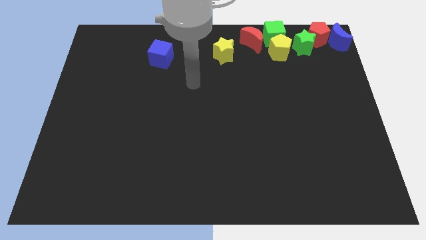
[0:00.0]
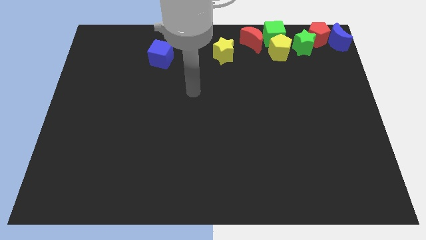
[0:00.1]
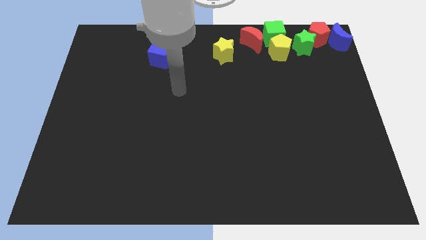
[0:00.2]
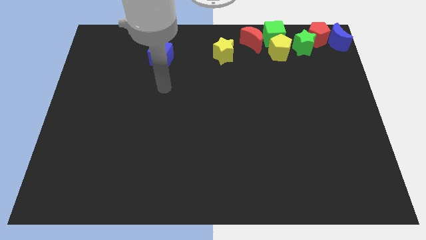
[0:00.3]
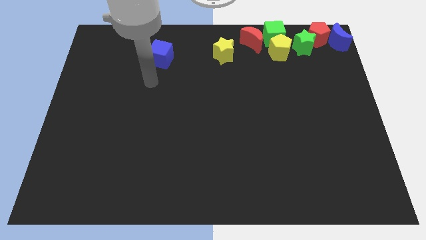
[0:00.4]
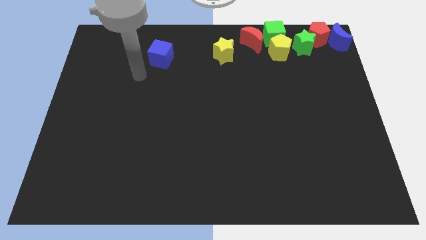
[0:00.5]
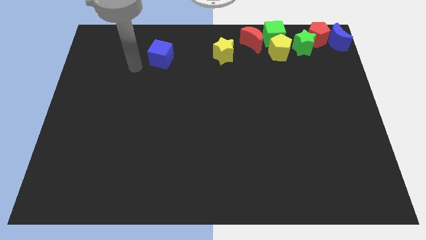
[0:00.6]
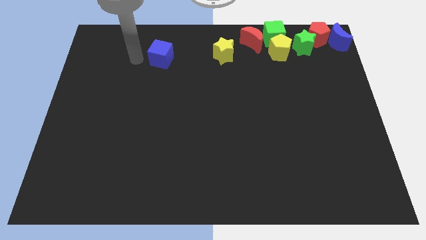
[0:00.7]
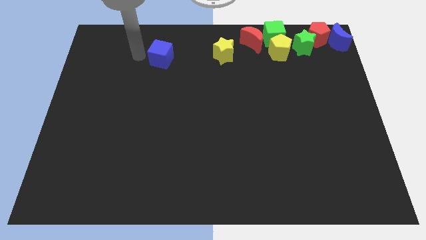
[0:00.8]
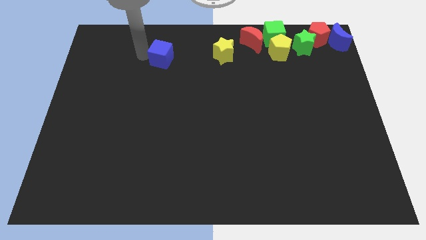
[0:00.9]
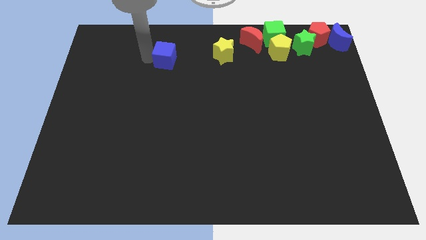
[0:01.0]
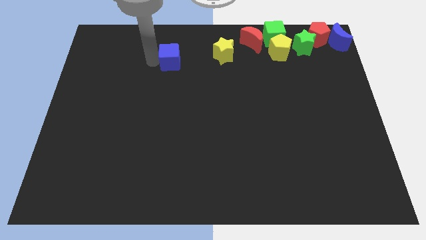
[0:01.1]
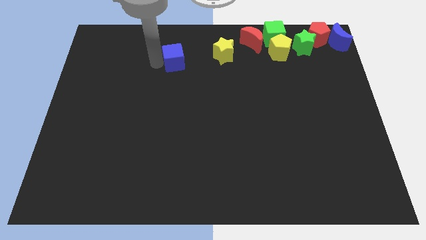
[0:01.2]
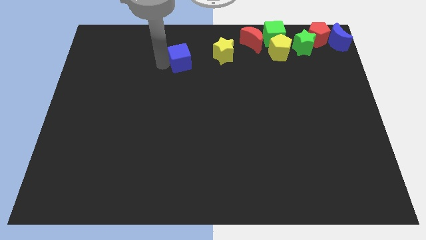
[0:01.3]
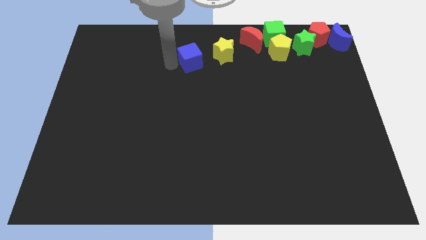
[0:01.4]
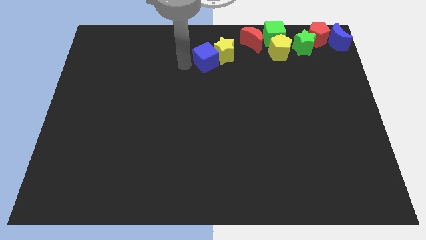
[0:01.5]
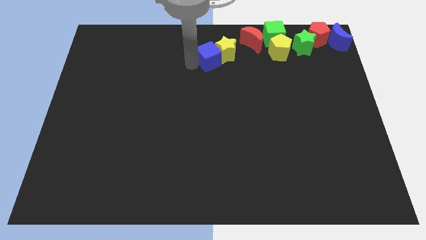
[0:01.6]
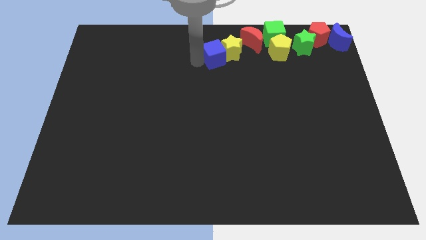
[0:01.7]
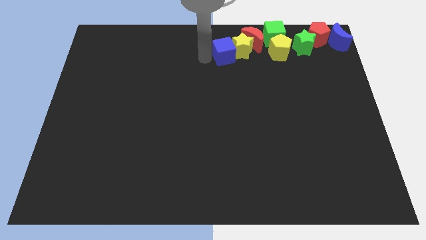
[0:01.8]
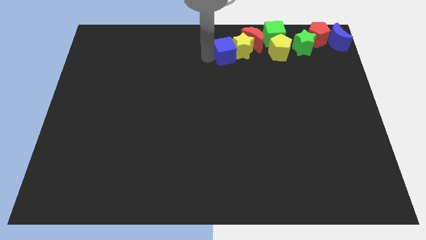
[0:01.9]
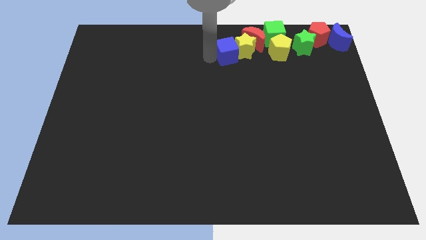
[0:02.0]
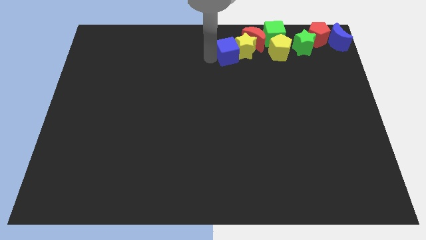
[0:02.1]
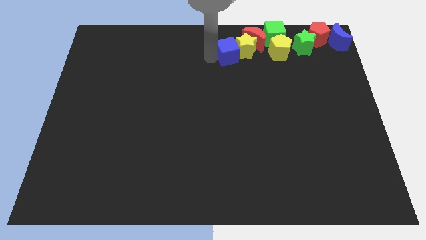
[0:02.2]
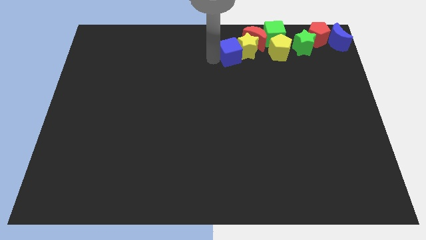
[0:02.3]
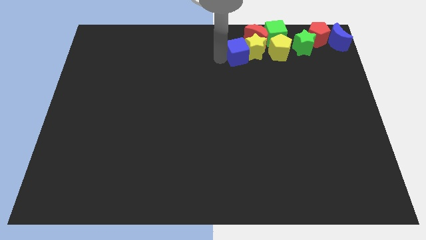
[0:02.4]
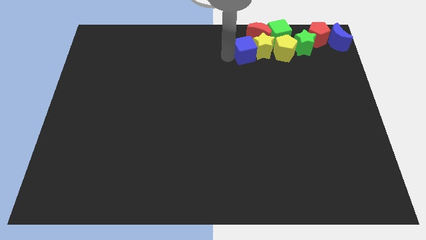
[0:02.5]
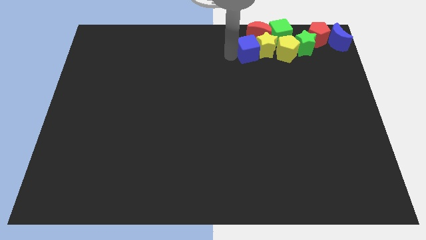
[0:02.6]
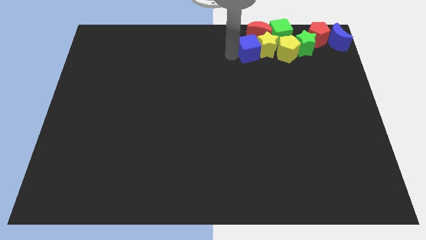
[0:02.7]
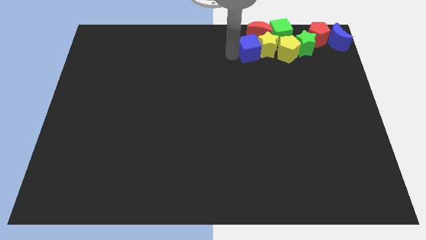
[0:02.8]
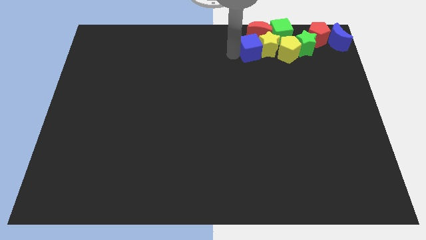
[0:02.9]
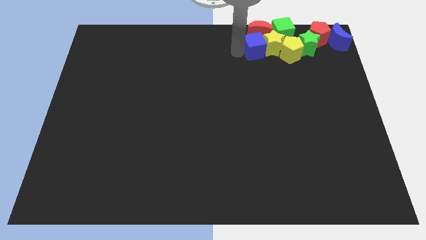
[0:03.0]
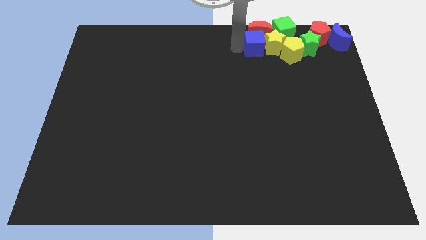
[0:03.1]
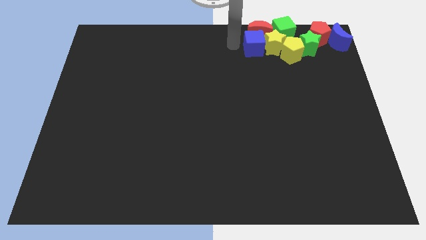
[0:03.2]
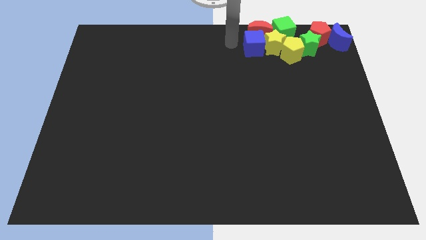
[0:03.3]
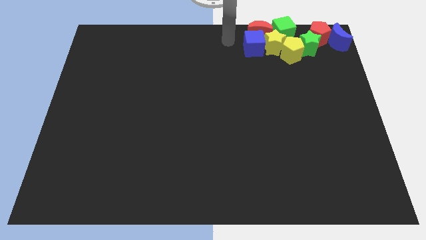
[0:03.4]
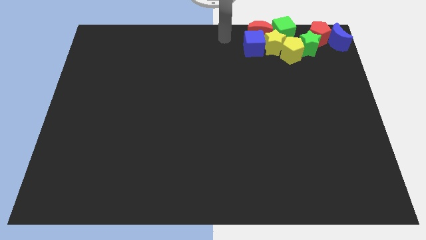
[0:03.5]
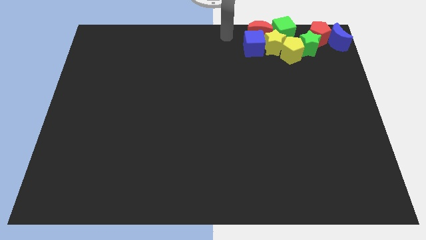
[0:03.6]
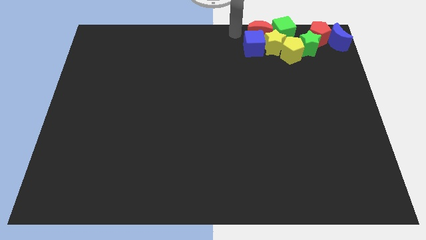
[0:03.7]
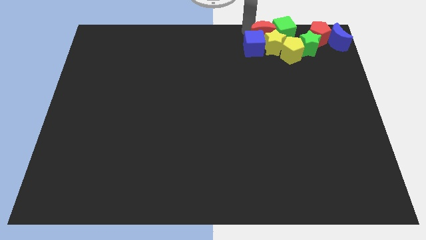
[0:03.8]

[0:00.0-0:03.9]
push the blue cube into the yellow star

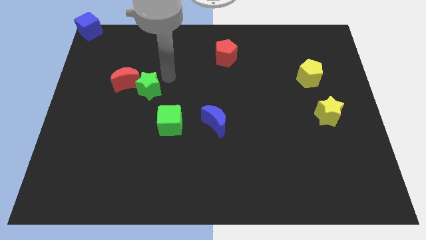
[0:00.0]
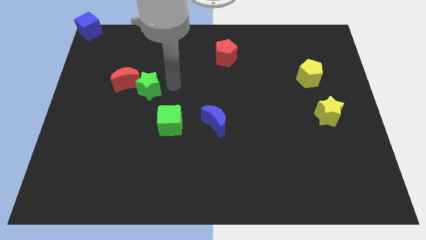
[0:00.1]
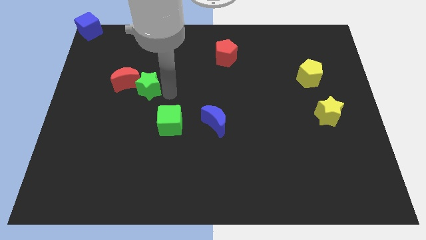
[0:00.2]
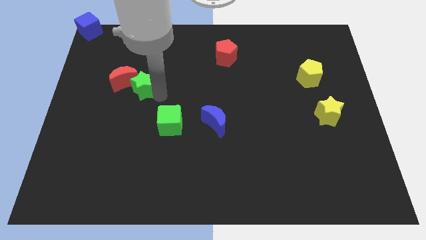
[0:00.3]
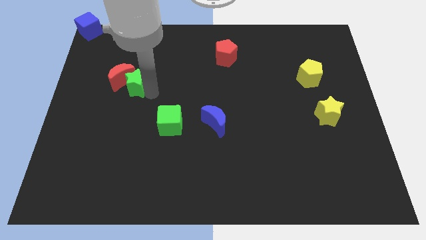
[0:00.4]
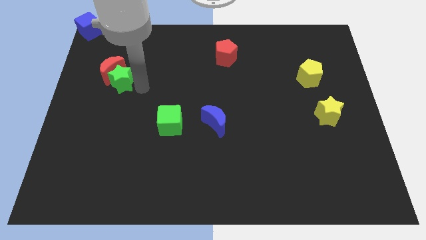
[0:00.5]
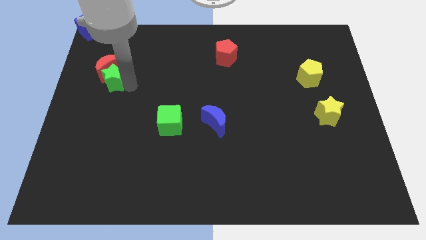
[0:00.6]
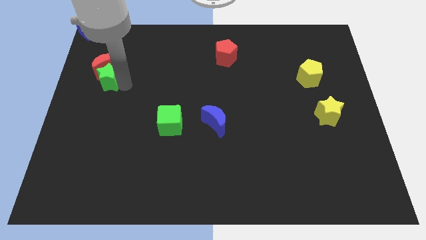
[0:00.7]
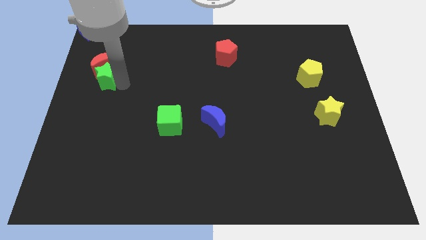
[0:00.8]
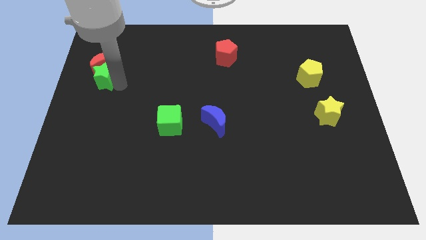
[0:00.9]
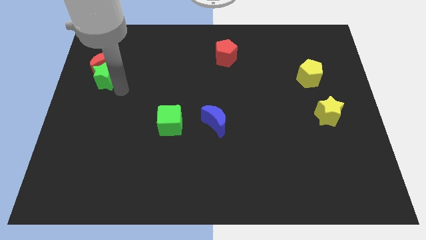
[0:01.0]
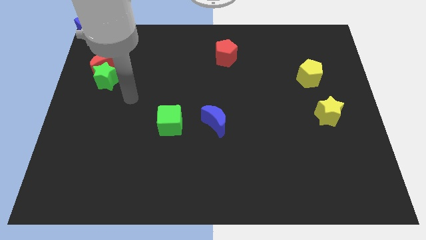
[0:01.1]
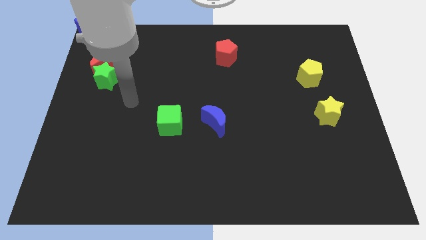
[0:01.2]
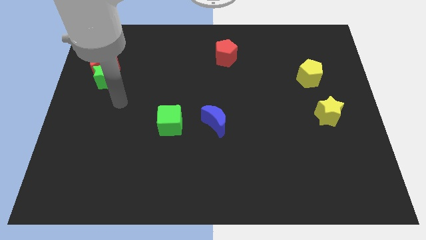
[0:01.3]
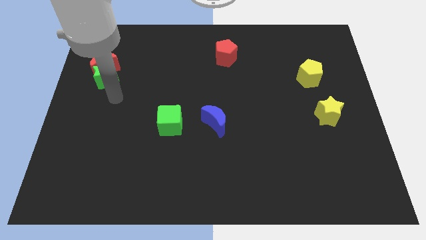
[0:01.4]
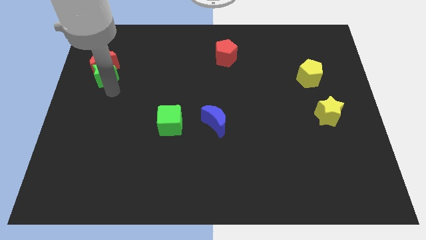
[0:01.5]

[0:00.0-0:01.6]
push the green star into the red moon

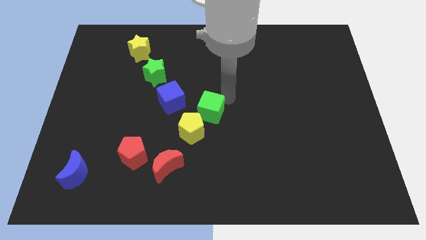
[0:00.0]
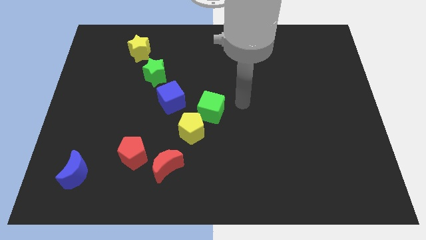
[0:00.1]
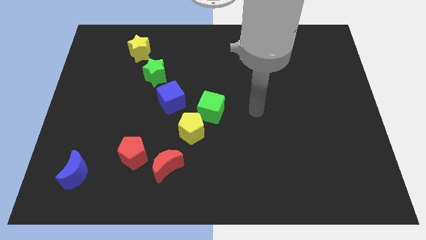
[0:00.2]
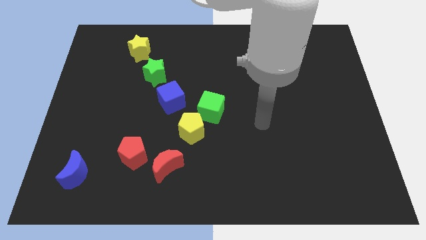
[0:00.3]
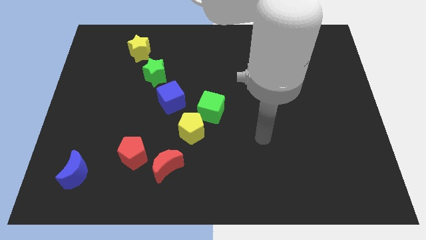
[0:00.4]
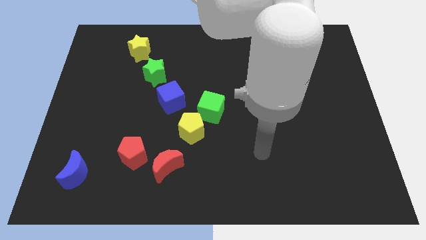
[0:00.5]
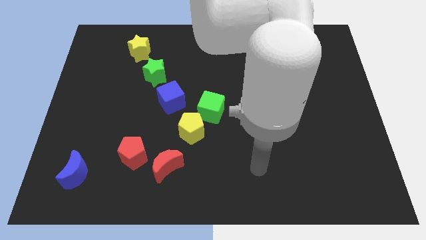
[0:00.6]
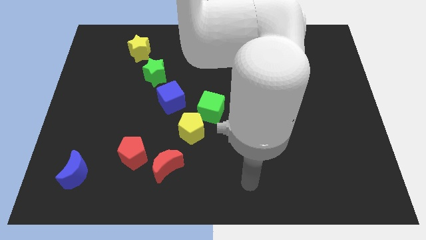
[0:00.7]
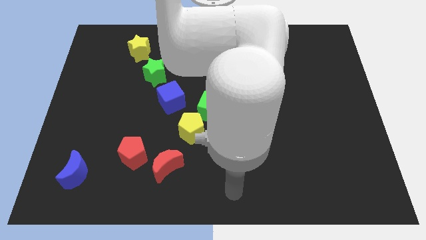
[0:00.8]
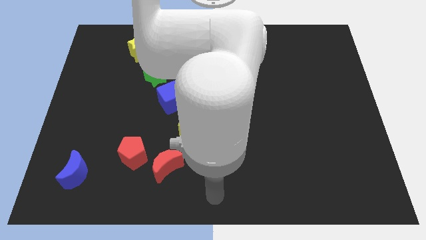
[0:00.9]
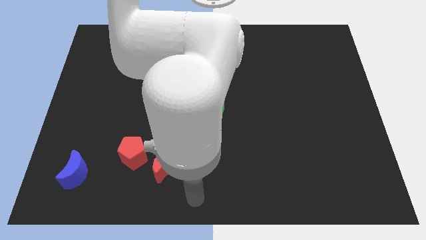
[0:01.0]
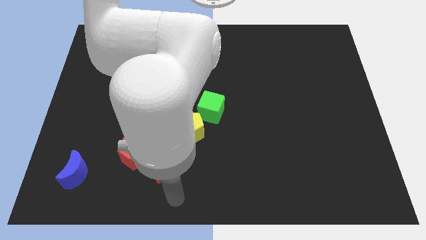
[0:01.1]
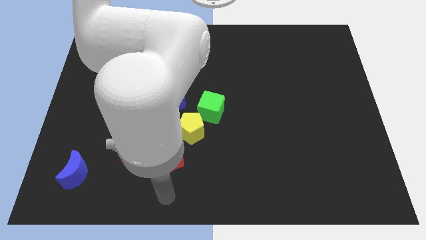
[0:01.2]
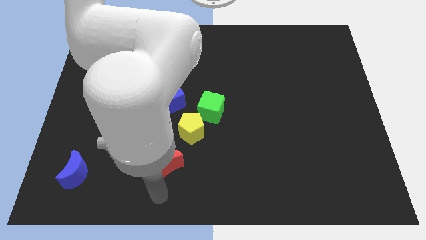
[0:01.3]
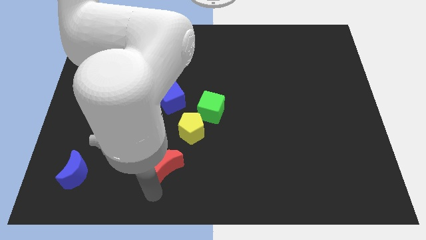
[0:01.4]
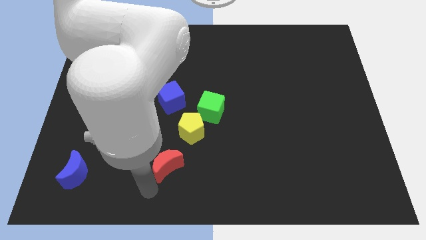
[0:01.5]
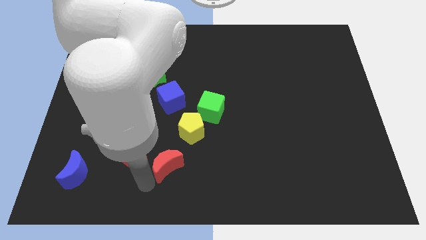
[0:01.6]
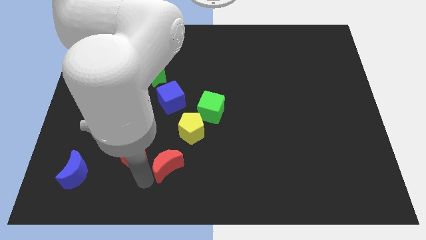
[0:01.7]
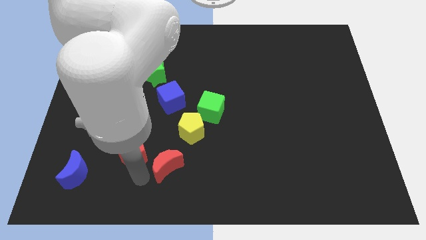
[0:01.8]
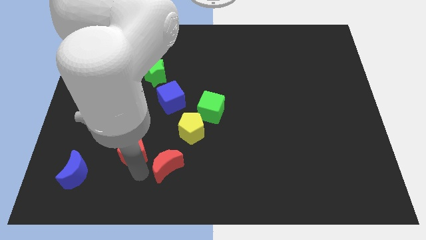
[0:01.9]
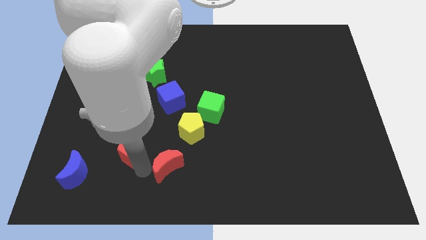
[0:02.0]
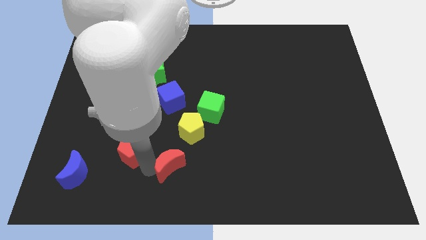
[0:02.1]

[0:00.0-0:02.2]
move your arm towards the red crescent

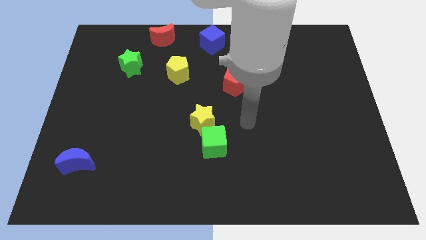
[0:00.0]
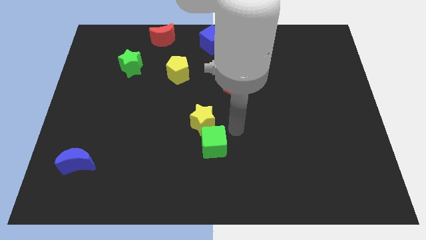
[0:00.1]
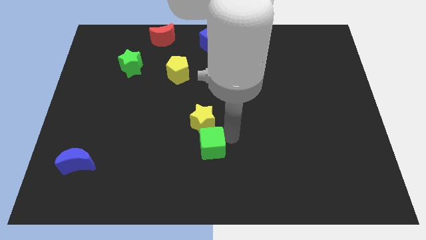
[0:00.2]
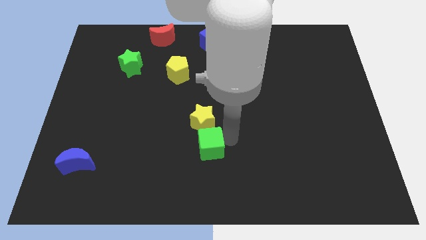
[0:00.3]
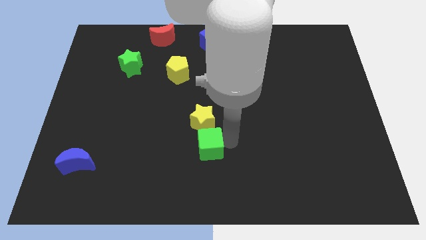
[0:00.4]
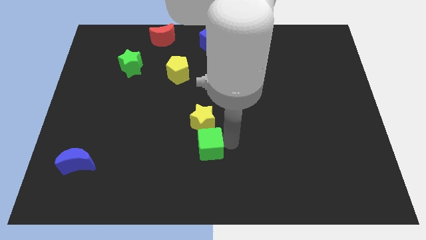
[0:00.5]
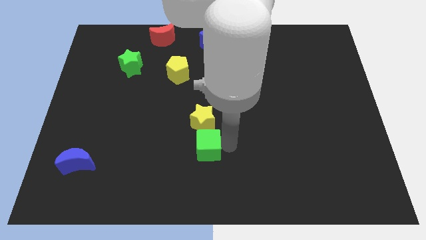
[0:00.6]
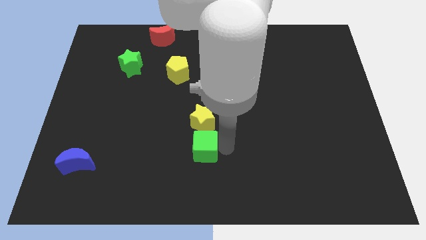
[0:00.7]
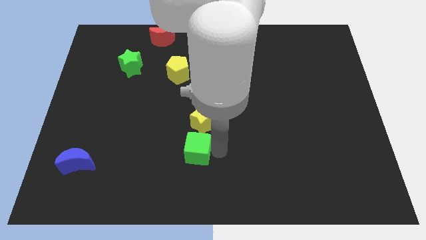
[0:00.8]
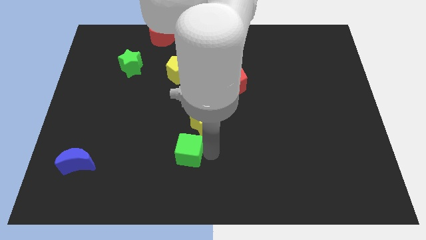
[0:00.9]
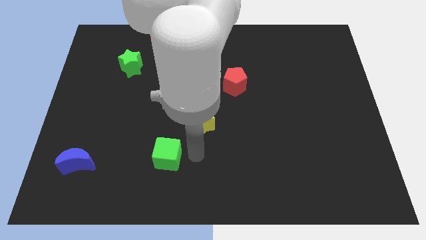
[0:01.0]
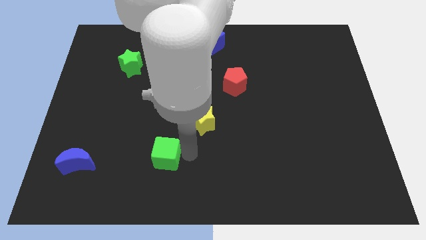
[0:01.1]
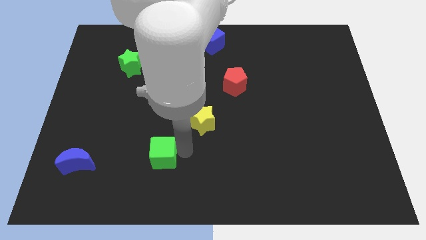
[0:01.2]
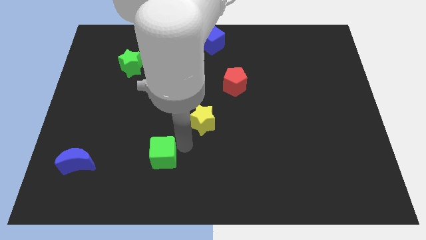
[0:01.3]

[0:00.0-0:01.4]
move the green cube diagonally to the bottom left of the yellow star
